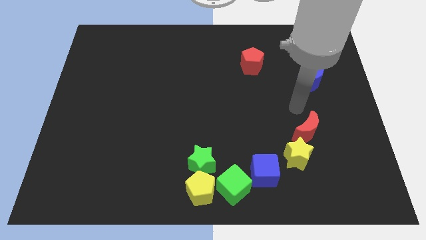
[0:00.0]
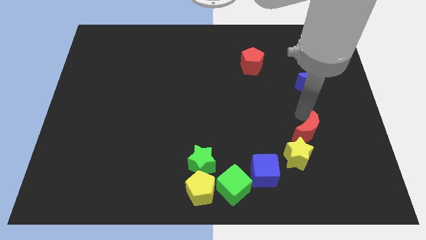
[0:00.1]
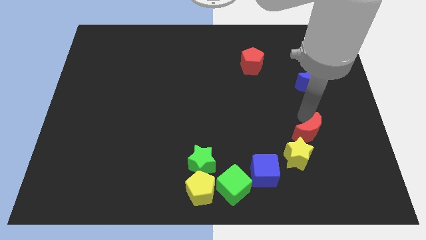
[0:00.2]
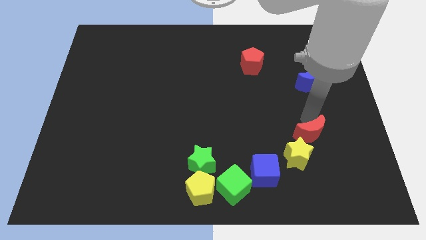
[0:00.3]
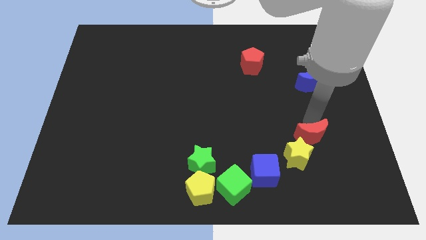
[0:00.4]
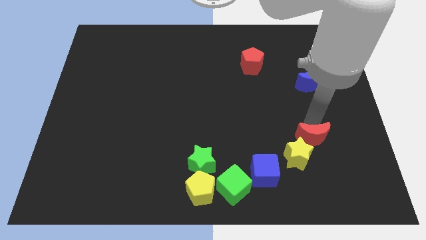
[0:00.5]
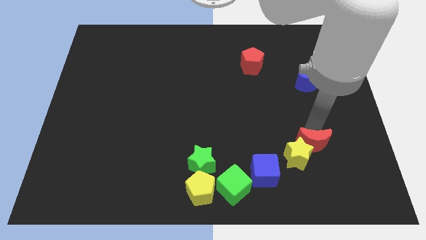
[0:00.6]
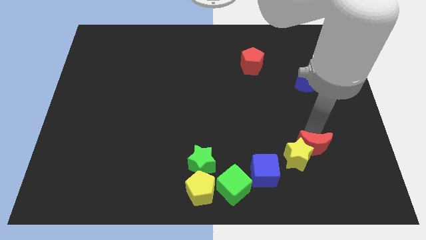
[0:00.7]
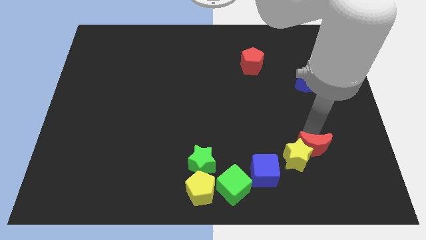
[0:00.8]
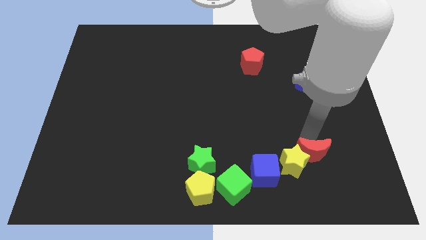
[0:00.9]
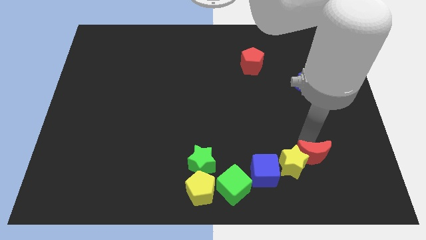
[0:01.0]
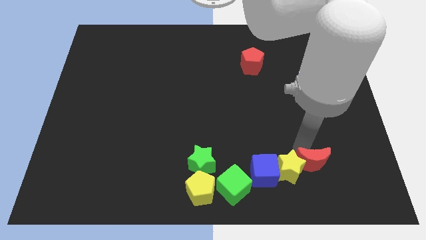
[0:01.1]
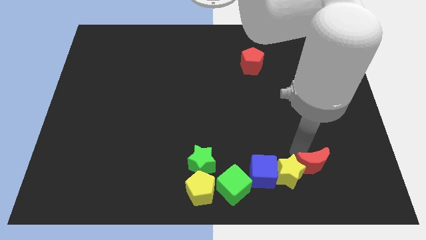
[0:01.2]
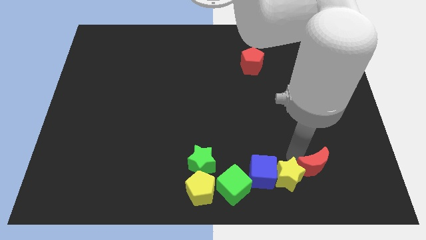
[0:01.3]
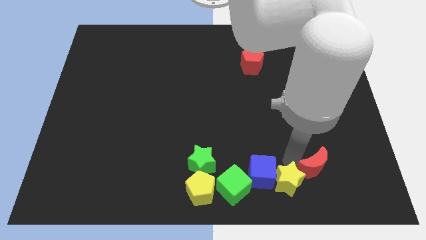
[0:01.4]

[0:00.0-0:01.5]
push the red crescent into the yellow star

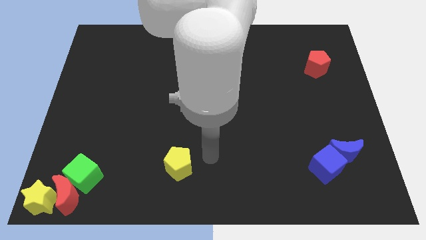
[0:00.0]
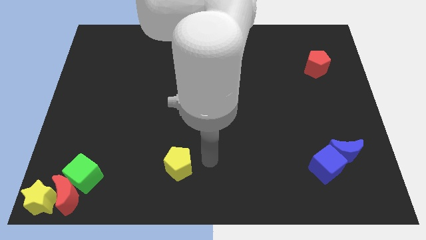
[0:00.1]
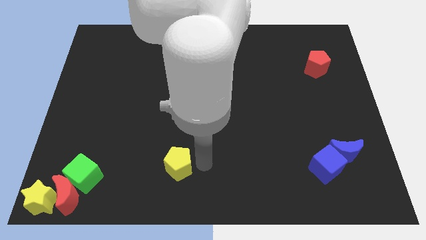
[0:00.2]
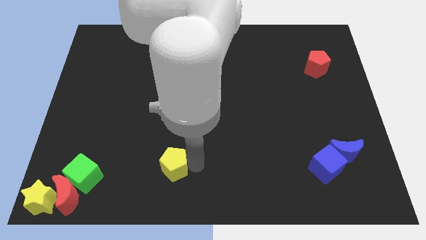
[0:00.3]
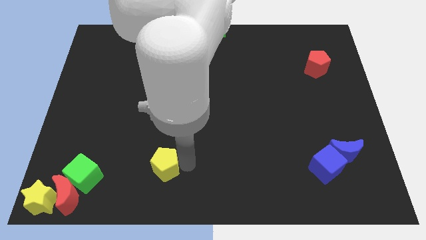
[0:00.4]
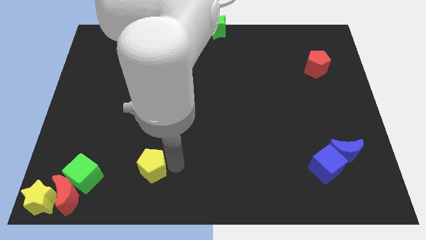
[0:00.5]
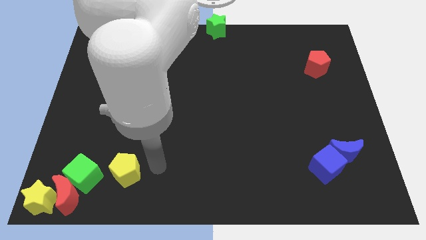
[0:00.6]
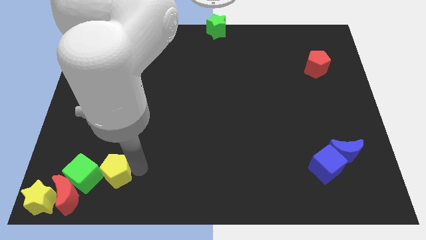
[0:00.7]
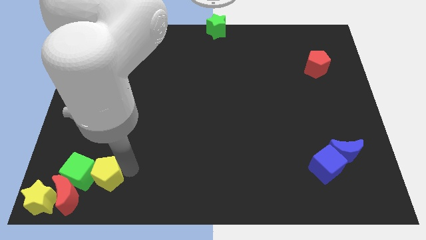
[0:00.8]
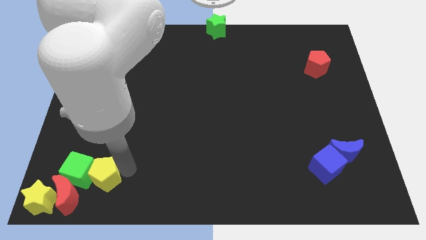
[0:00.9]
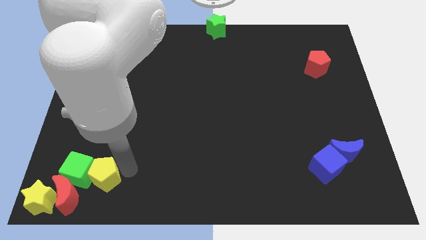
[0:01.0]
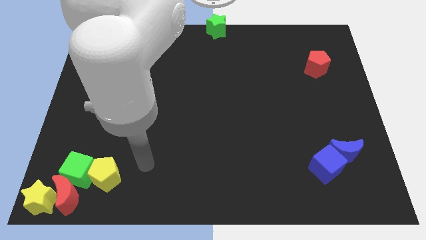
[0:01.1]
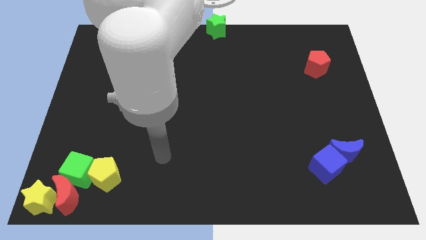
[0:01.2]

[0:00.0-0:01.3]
move the yellow pentagon into the green cube

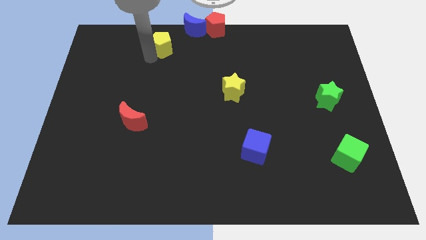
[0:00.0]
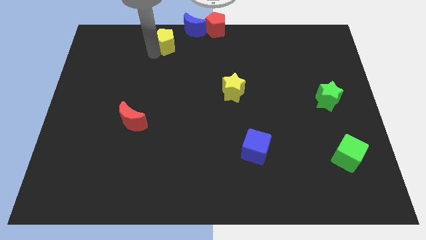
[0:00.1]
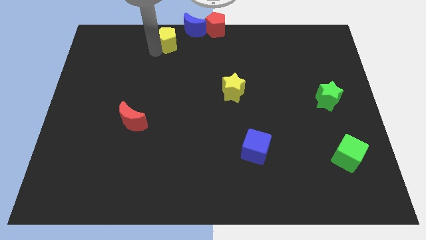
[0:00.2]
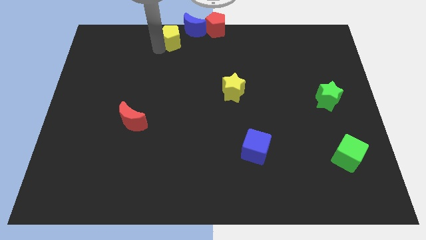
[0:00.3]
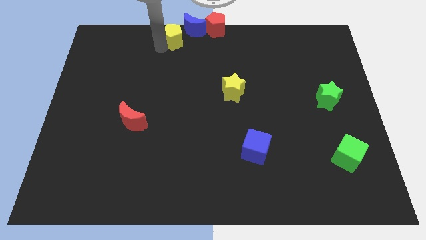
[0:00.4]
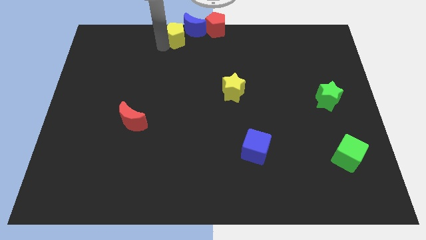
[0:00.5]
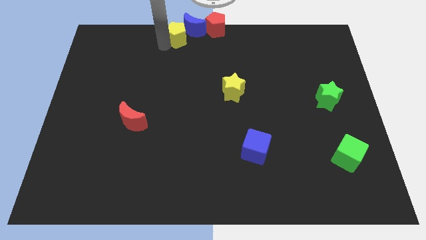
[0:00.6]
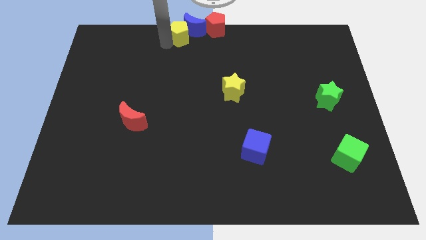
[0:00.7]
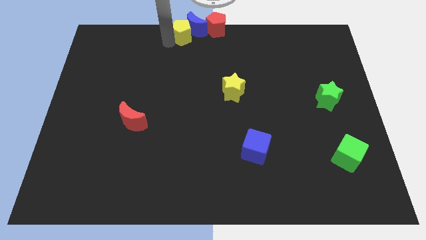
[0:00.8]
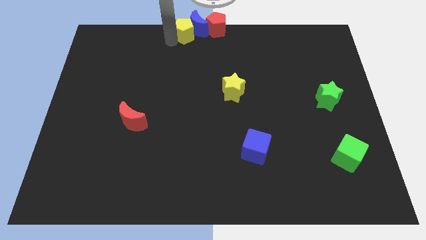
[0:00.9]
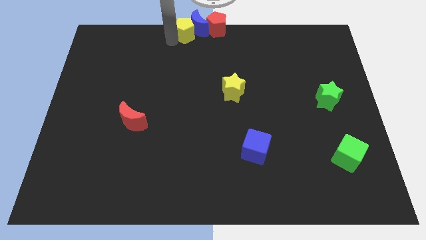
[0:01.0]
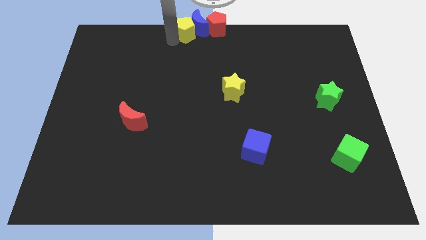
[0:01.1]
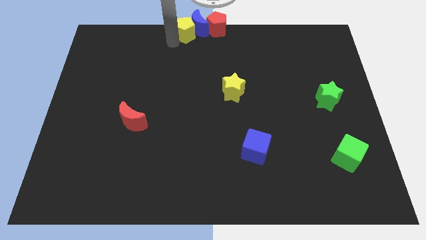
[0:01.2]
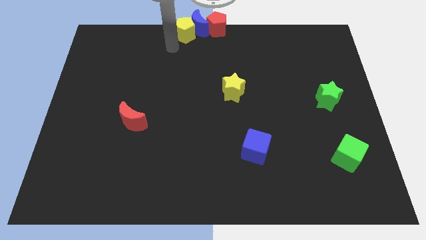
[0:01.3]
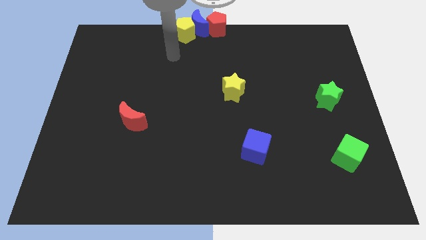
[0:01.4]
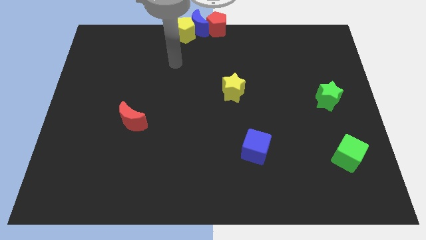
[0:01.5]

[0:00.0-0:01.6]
push the yellow pentagon into the blue crescent
